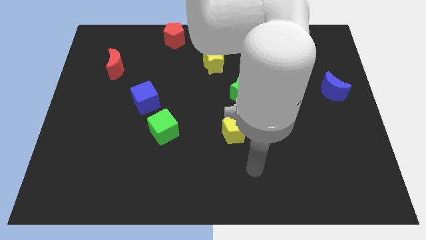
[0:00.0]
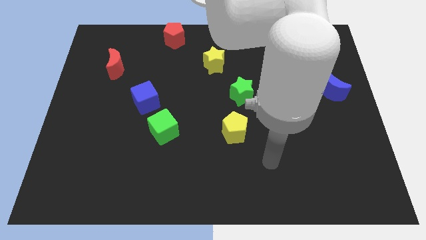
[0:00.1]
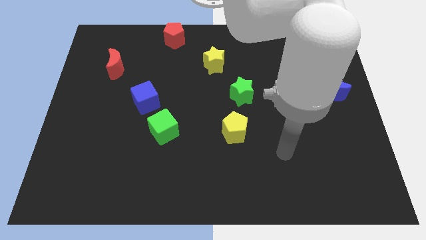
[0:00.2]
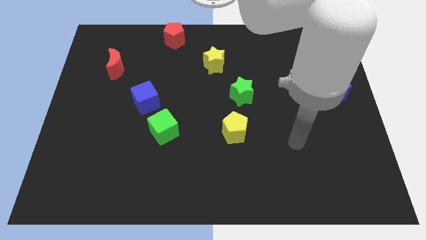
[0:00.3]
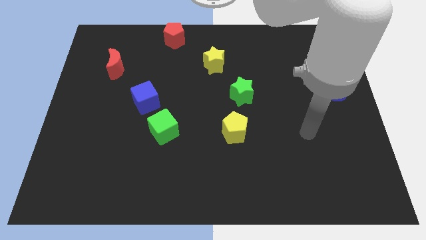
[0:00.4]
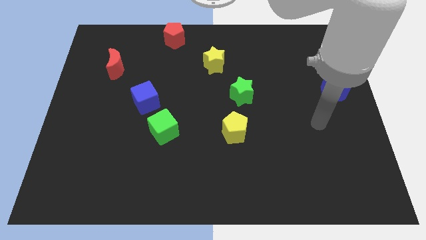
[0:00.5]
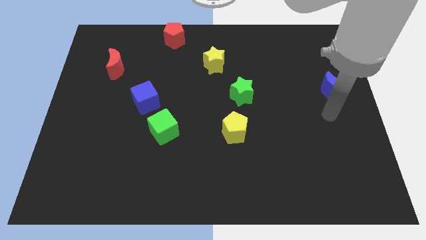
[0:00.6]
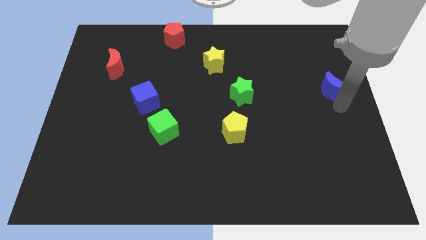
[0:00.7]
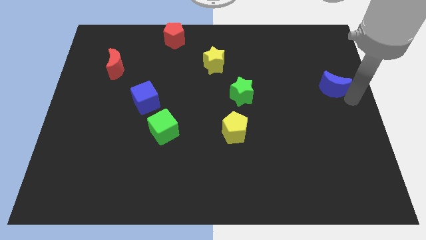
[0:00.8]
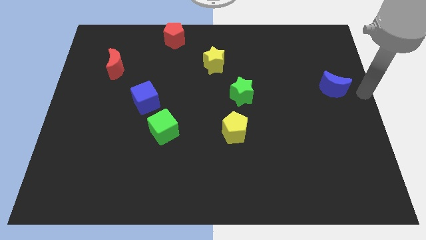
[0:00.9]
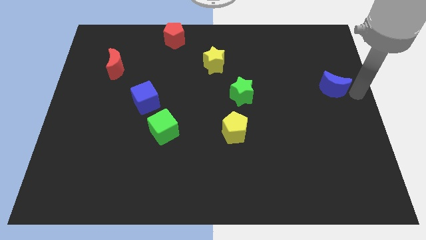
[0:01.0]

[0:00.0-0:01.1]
tap your arm to the right side of blue moon

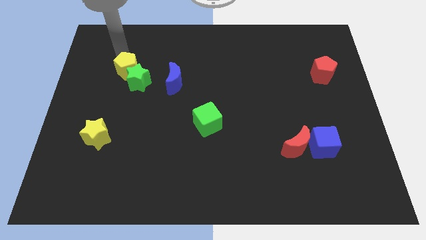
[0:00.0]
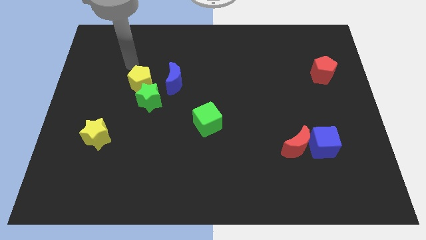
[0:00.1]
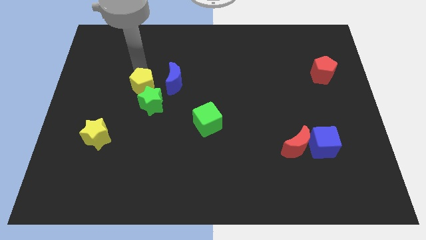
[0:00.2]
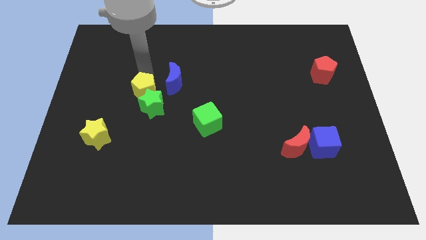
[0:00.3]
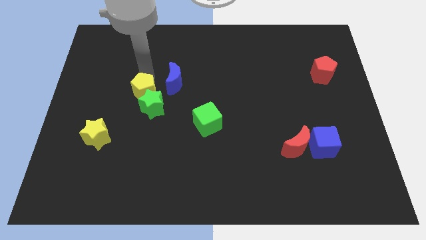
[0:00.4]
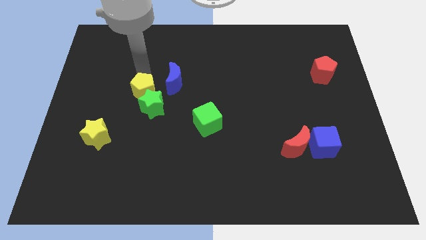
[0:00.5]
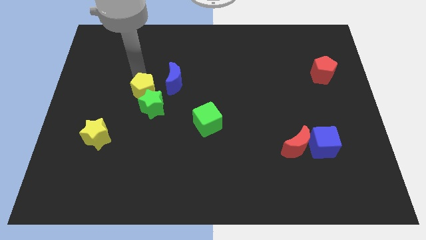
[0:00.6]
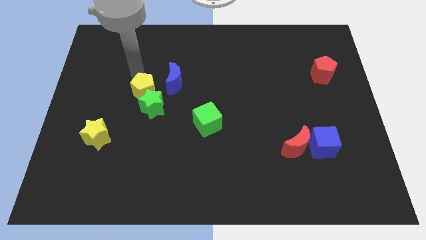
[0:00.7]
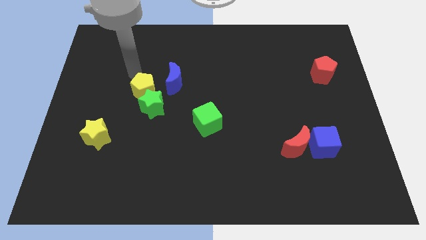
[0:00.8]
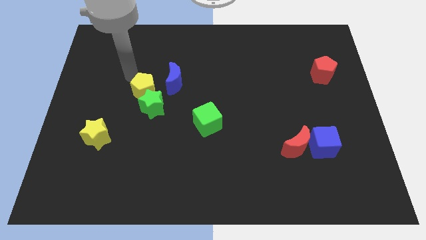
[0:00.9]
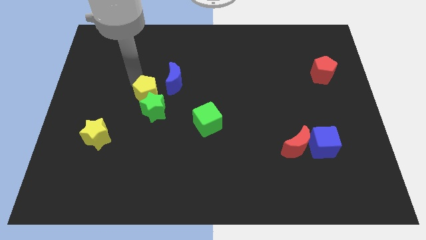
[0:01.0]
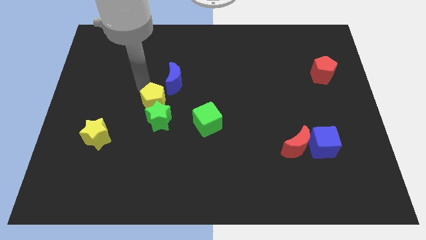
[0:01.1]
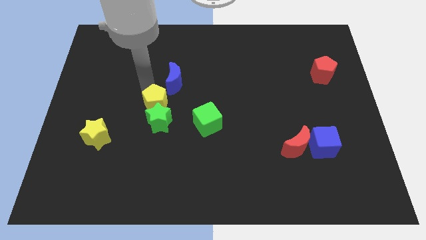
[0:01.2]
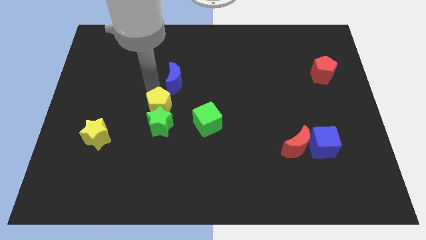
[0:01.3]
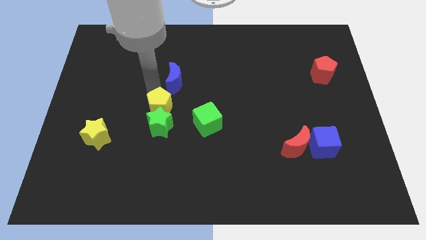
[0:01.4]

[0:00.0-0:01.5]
move the yellow pentagon into the green star

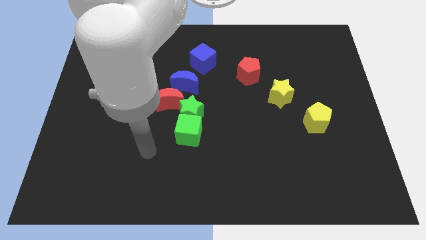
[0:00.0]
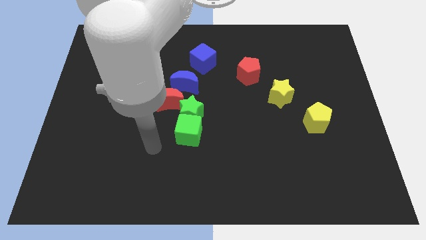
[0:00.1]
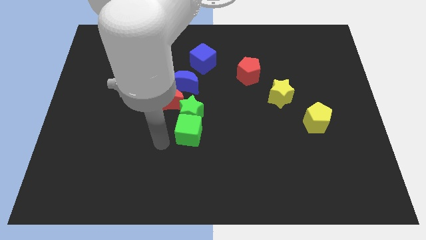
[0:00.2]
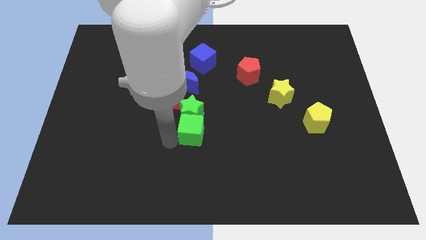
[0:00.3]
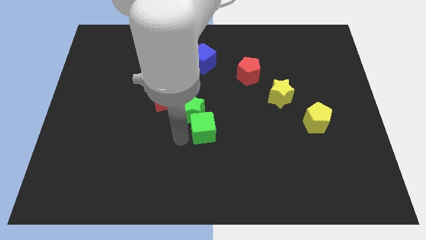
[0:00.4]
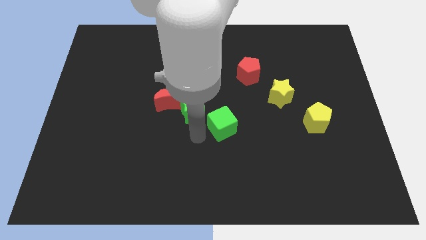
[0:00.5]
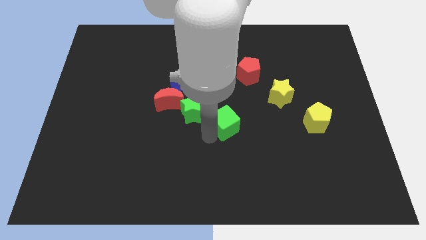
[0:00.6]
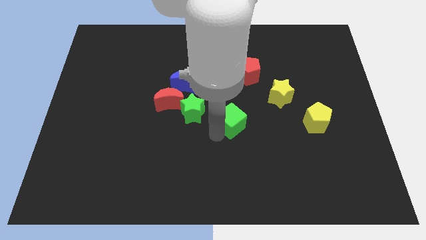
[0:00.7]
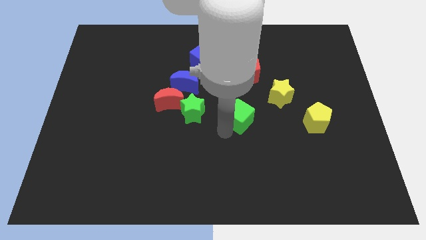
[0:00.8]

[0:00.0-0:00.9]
push green cube to the center of the board

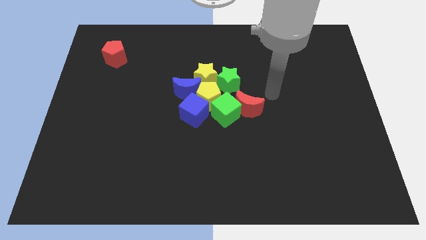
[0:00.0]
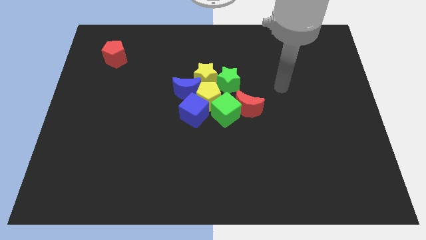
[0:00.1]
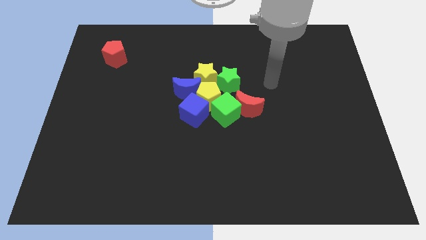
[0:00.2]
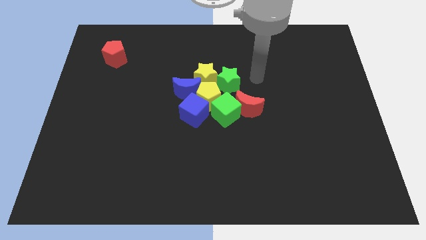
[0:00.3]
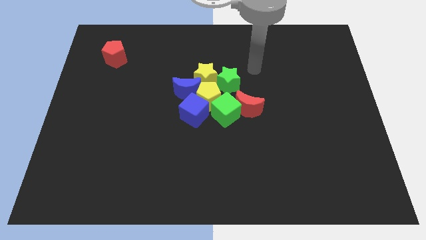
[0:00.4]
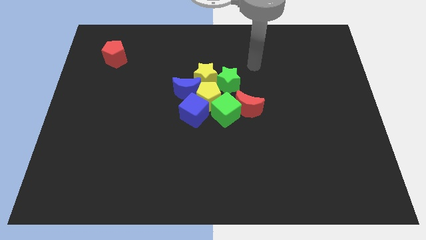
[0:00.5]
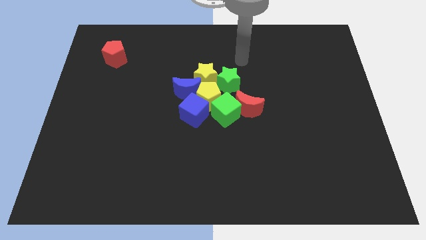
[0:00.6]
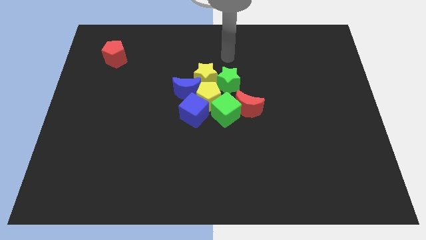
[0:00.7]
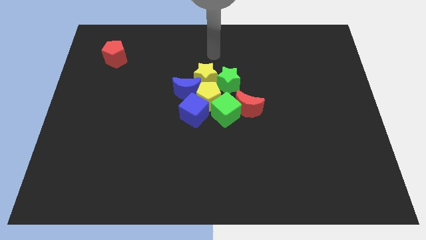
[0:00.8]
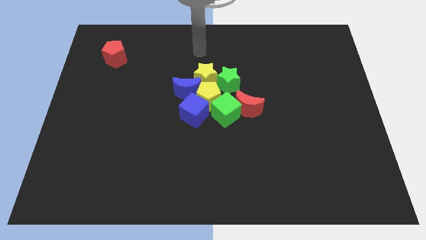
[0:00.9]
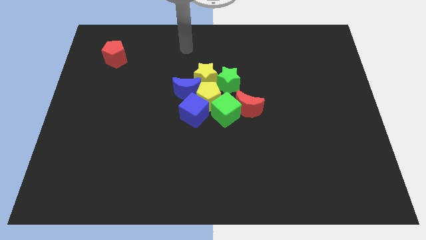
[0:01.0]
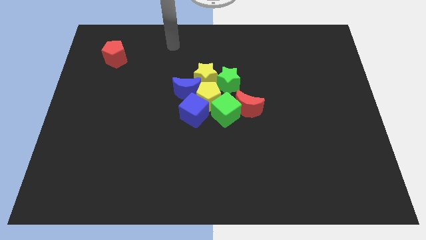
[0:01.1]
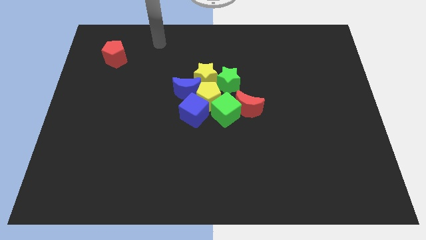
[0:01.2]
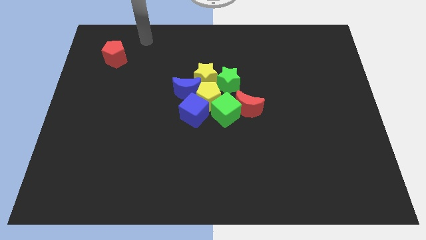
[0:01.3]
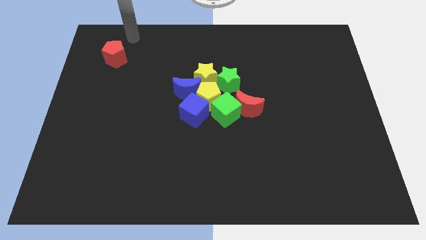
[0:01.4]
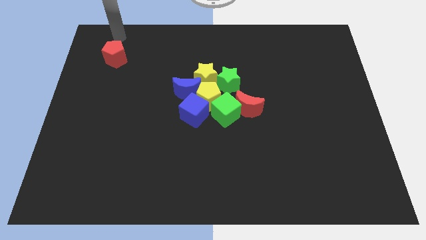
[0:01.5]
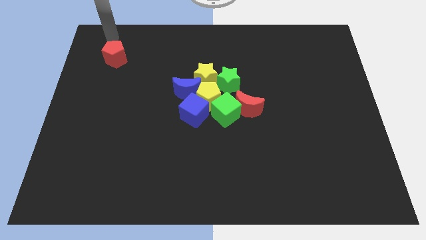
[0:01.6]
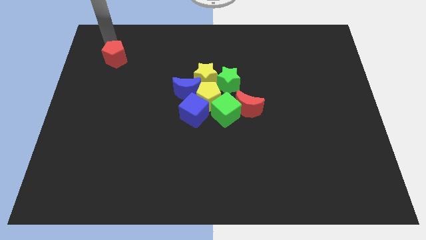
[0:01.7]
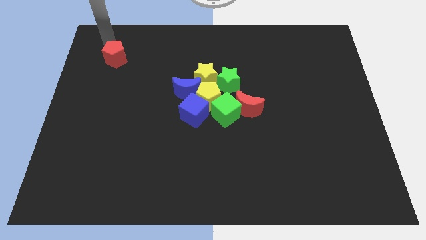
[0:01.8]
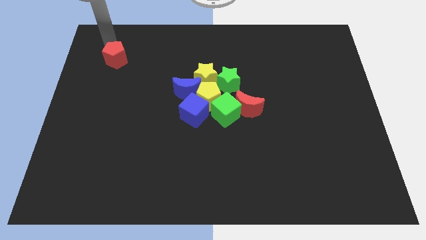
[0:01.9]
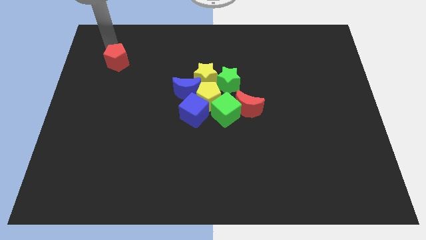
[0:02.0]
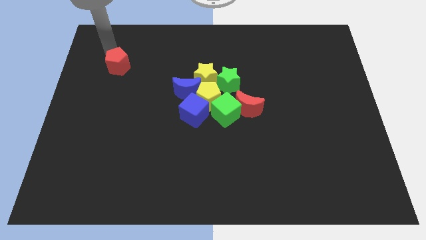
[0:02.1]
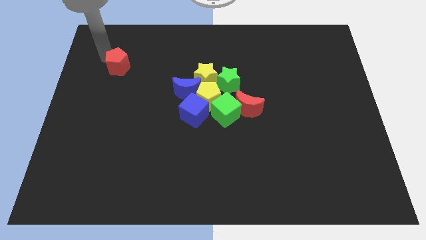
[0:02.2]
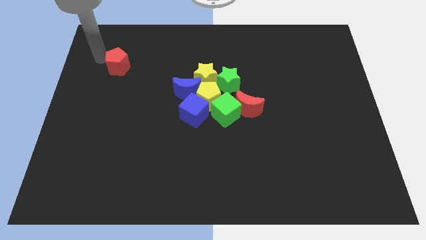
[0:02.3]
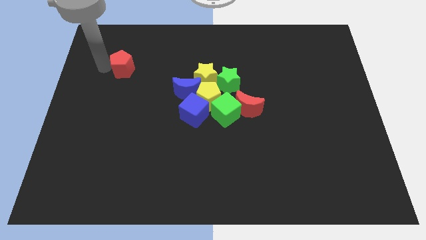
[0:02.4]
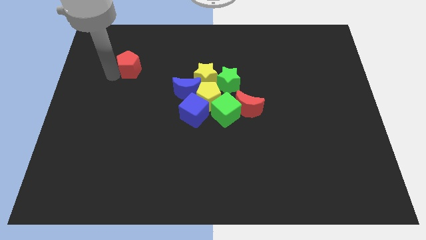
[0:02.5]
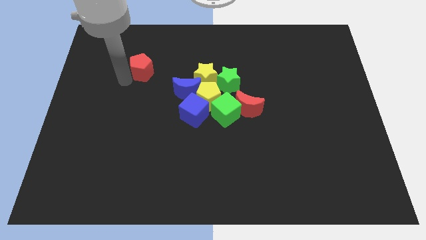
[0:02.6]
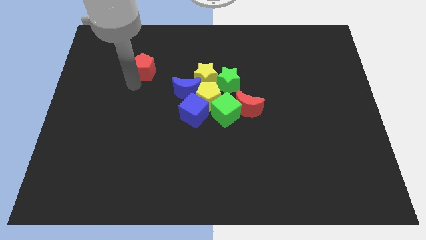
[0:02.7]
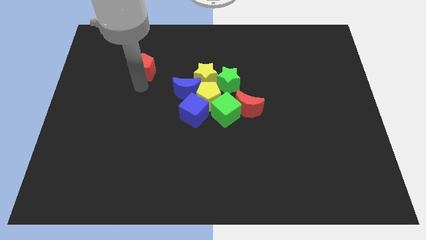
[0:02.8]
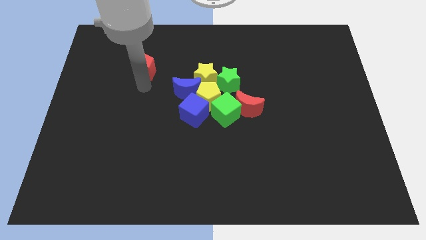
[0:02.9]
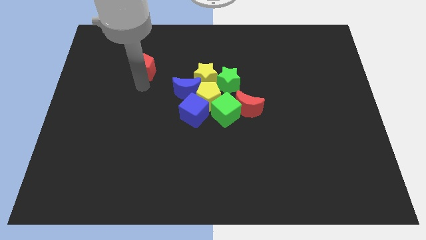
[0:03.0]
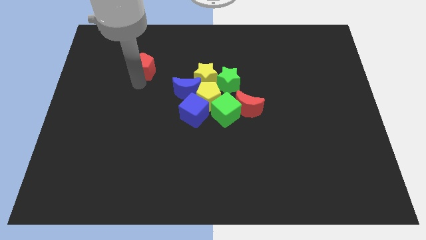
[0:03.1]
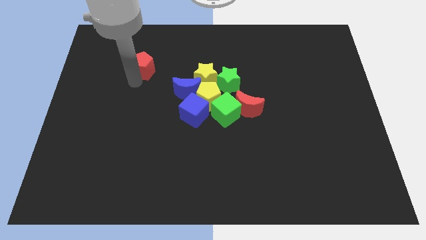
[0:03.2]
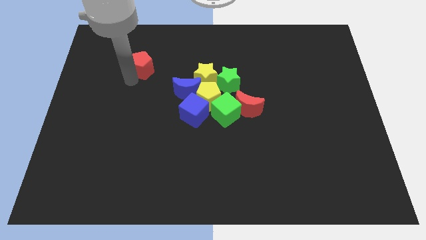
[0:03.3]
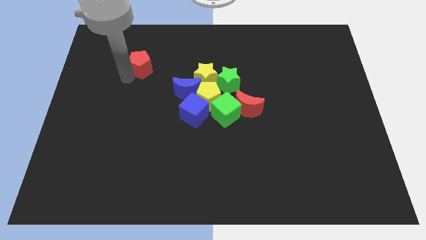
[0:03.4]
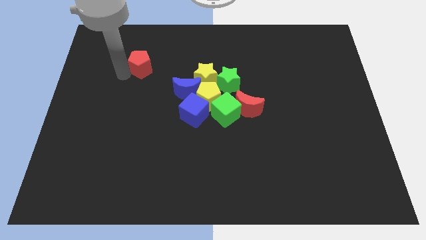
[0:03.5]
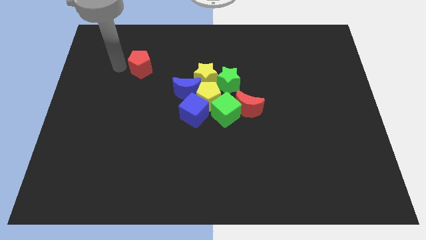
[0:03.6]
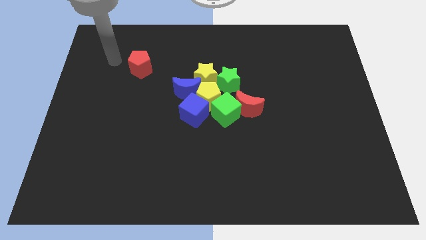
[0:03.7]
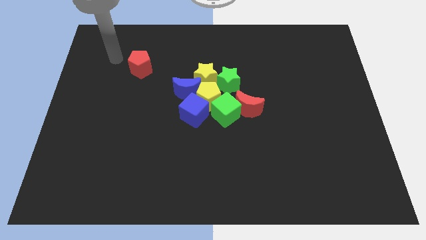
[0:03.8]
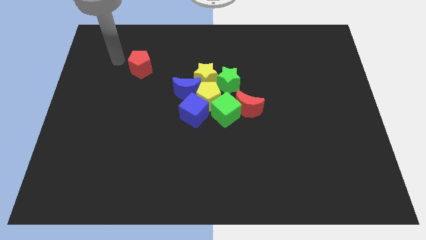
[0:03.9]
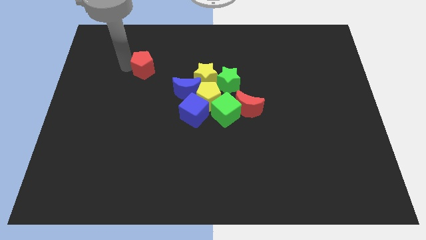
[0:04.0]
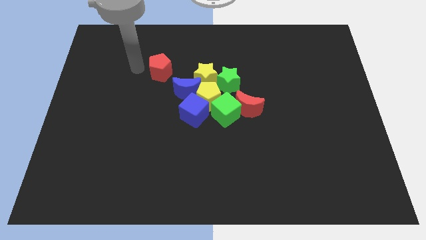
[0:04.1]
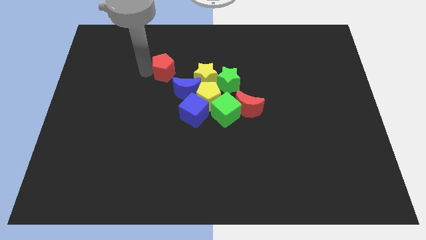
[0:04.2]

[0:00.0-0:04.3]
move the red pentagon to the group of blocks

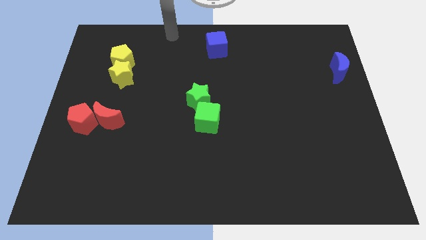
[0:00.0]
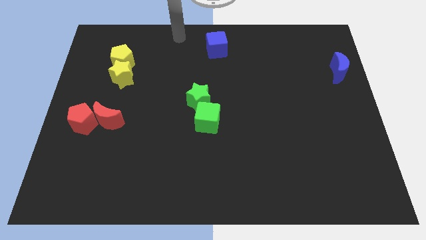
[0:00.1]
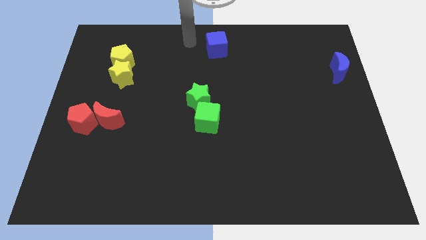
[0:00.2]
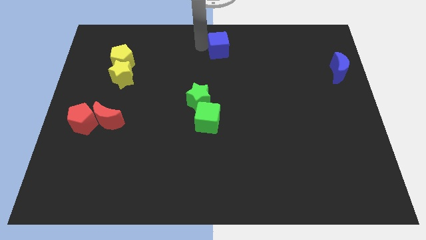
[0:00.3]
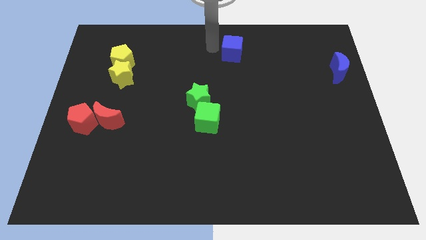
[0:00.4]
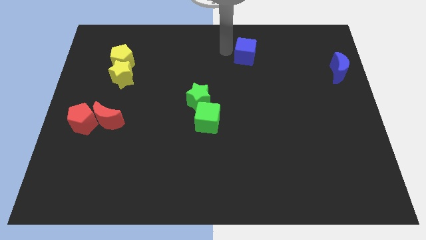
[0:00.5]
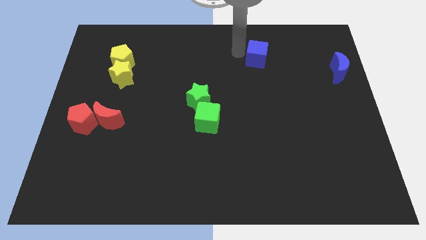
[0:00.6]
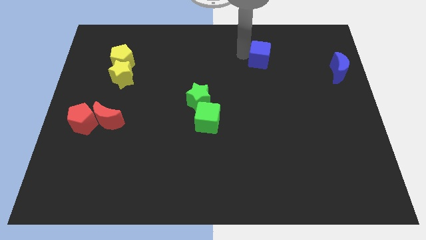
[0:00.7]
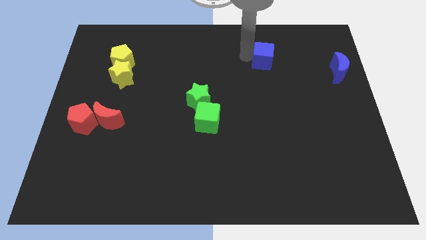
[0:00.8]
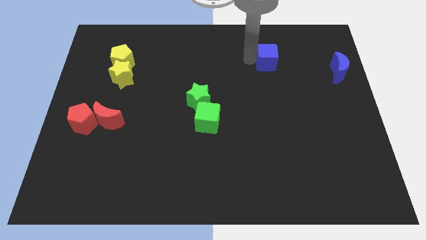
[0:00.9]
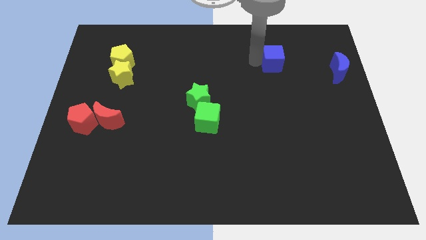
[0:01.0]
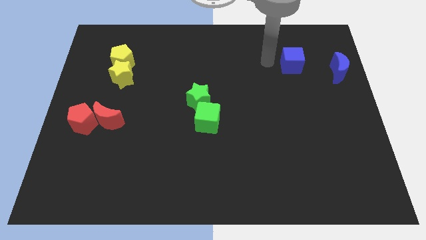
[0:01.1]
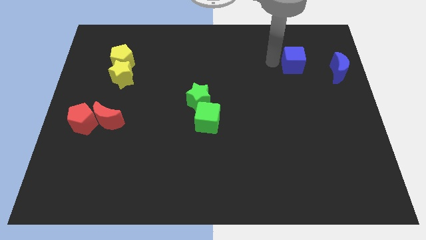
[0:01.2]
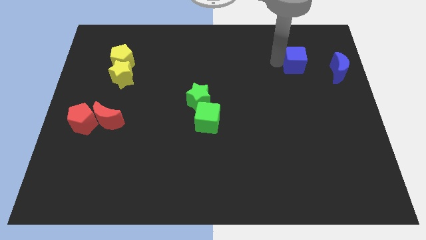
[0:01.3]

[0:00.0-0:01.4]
move blue cube towards the blue moon
